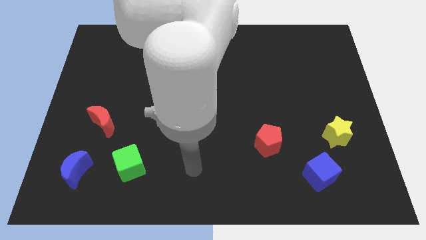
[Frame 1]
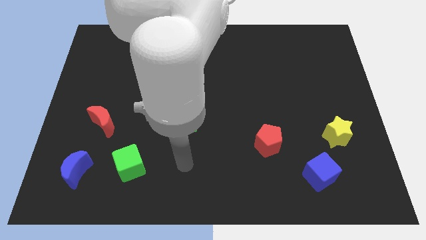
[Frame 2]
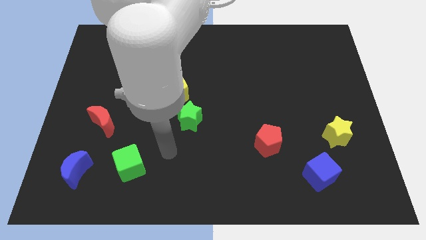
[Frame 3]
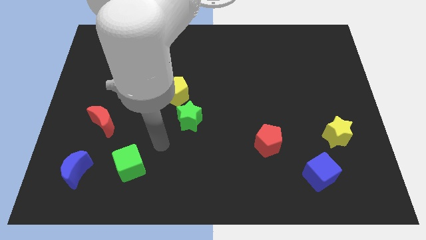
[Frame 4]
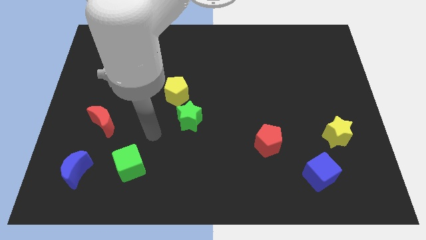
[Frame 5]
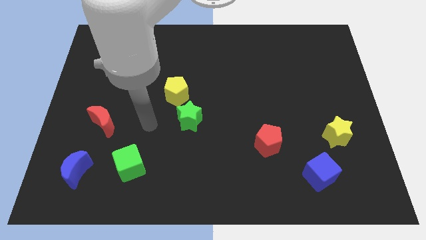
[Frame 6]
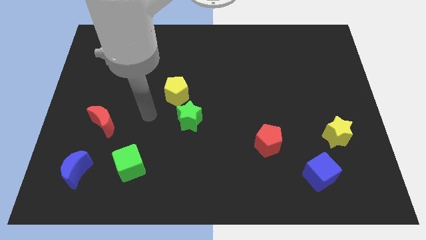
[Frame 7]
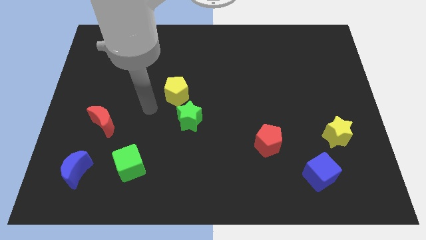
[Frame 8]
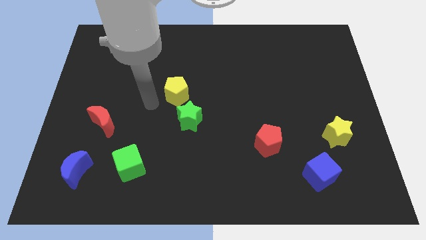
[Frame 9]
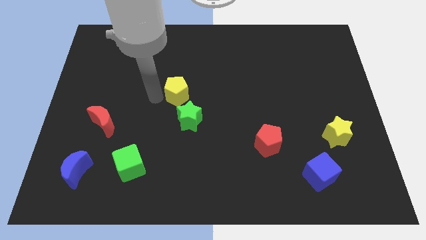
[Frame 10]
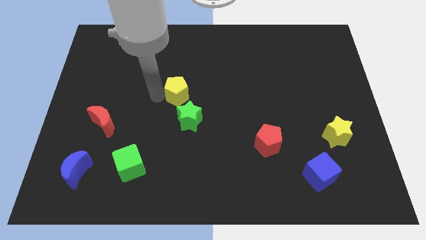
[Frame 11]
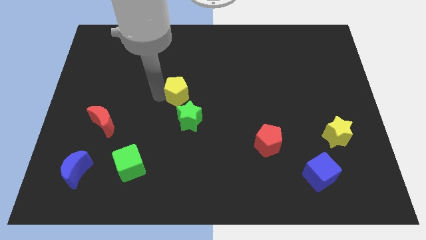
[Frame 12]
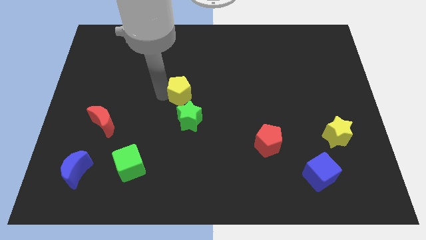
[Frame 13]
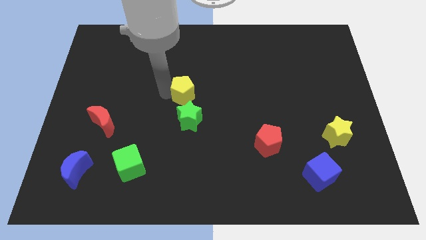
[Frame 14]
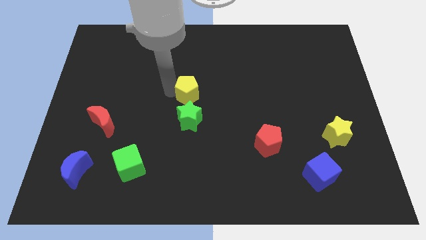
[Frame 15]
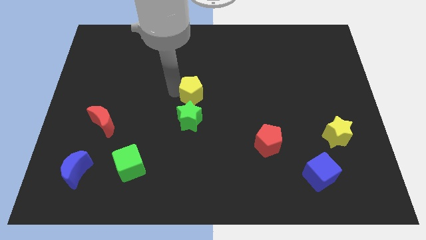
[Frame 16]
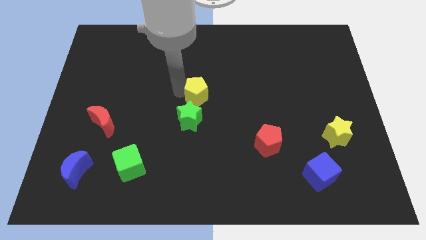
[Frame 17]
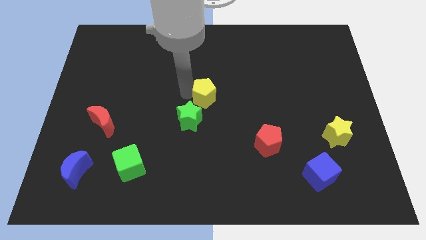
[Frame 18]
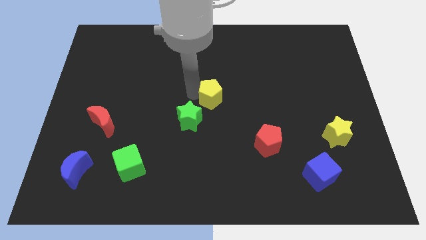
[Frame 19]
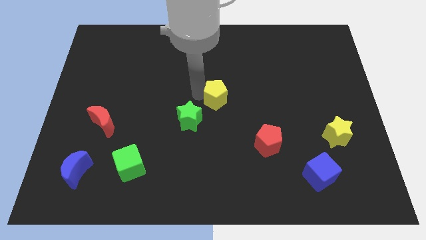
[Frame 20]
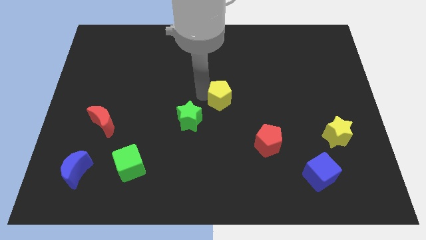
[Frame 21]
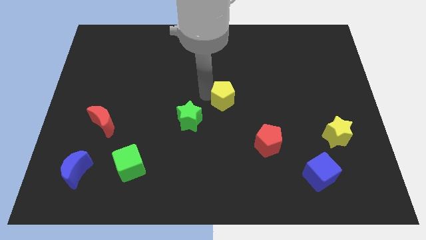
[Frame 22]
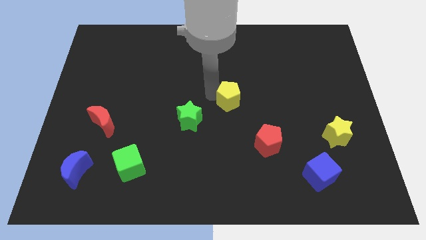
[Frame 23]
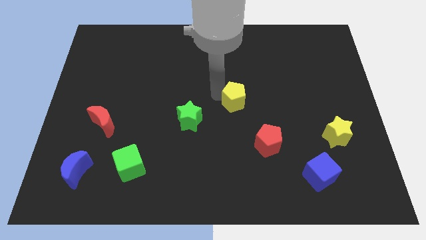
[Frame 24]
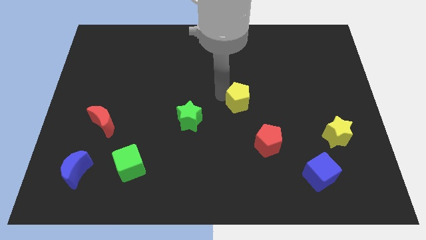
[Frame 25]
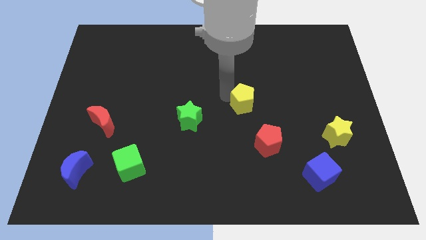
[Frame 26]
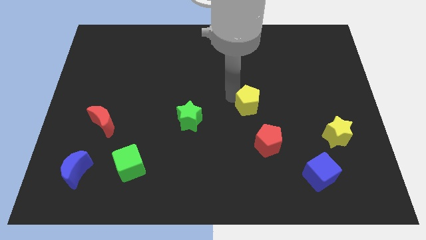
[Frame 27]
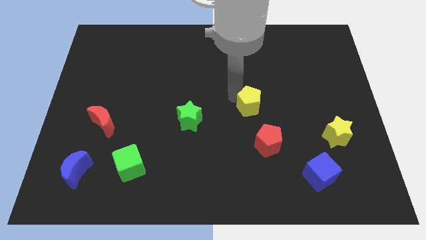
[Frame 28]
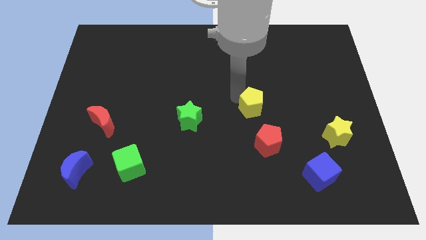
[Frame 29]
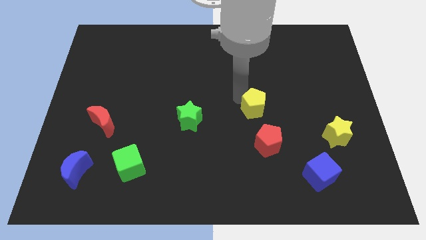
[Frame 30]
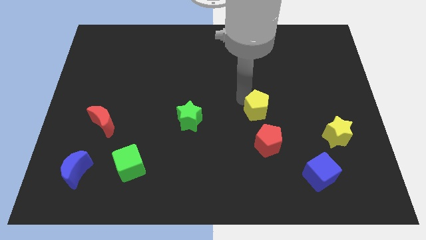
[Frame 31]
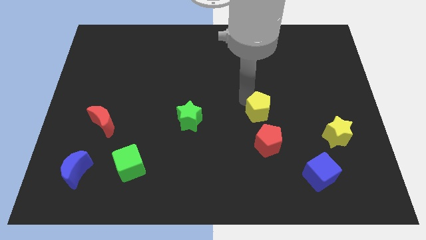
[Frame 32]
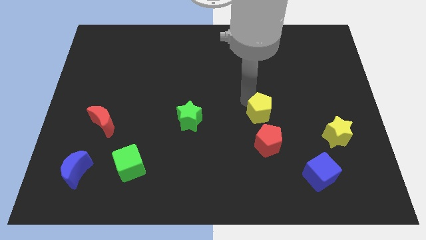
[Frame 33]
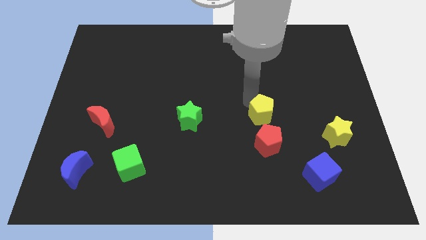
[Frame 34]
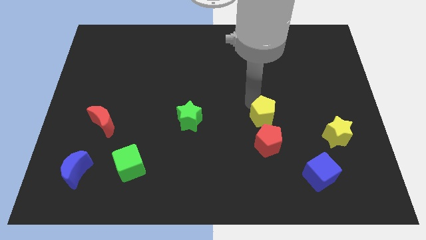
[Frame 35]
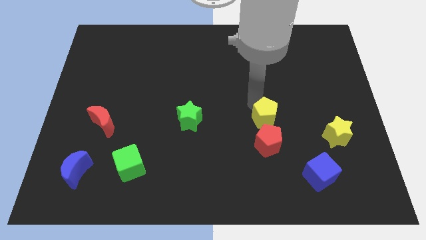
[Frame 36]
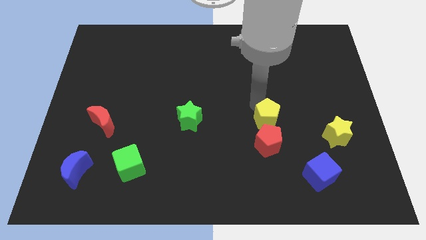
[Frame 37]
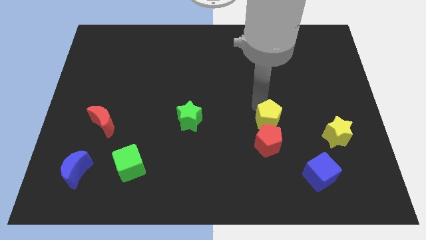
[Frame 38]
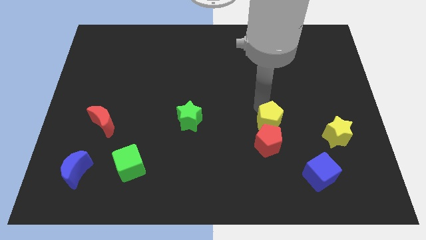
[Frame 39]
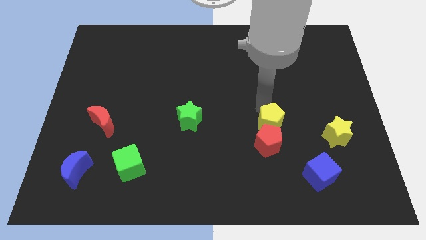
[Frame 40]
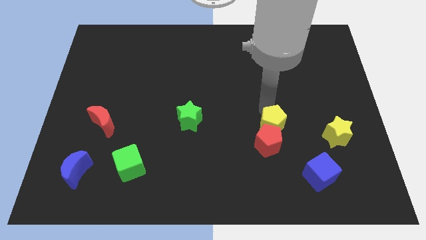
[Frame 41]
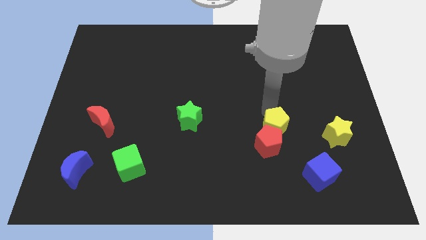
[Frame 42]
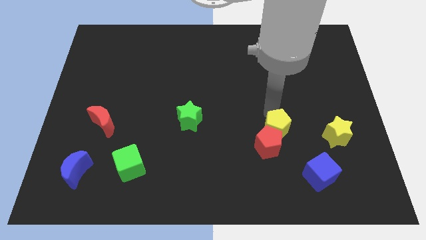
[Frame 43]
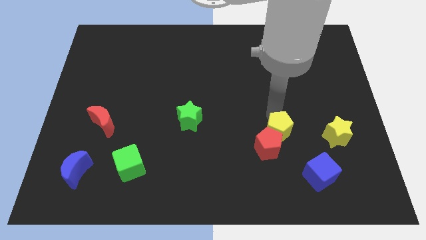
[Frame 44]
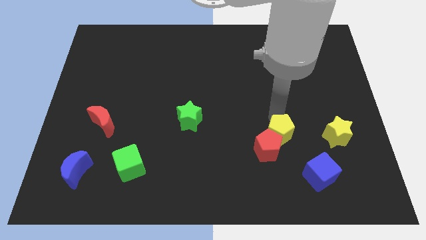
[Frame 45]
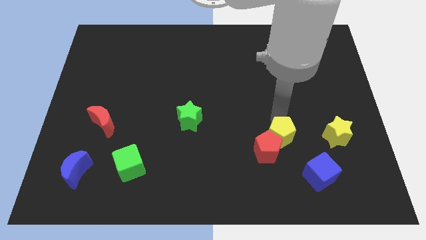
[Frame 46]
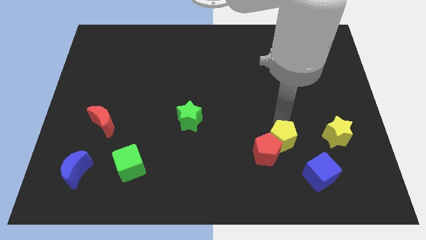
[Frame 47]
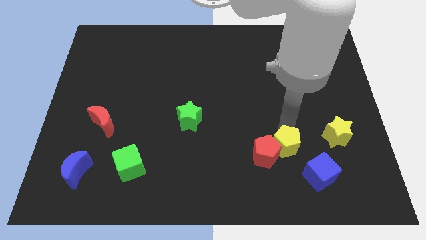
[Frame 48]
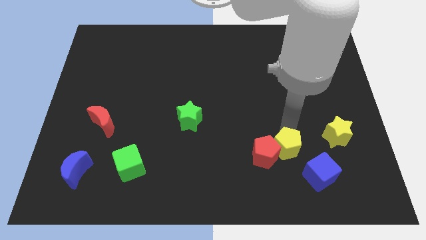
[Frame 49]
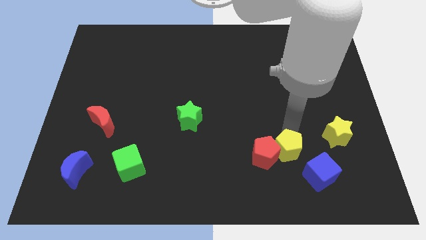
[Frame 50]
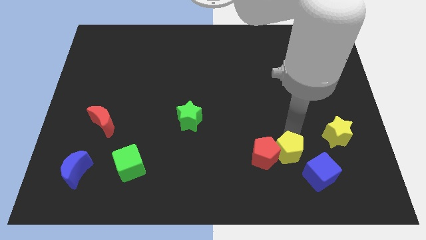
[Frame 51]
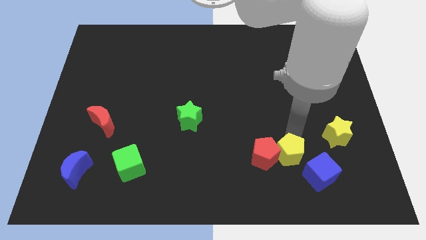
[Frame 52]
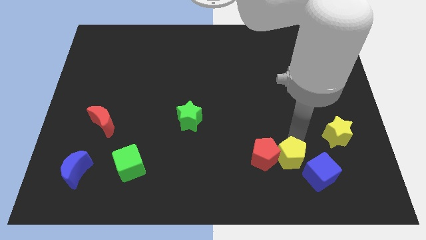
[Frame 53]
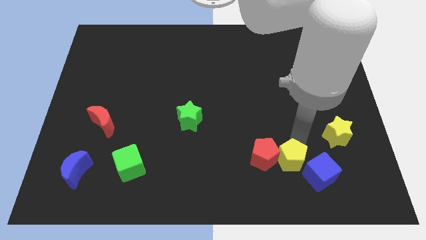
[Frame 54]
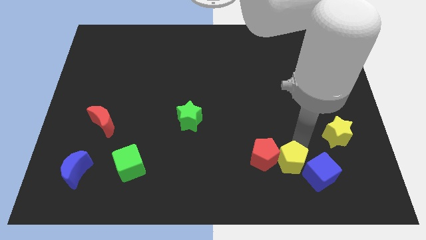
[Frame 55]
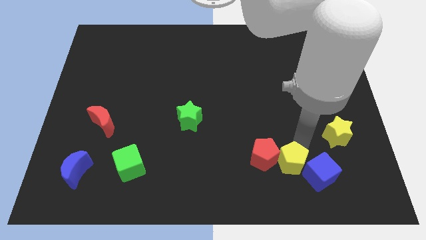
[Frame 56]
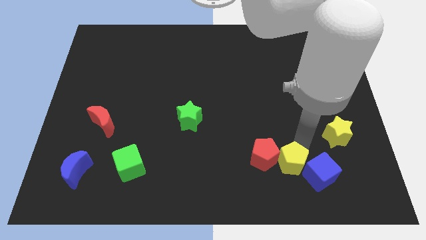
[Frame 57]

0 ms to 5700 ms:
slide the yellow pentagon next to the blue cube

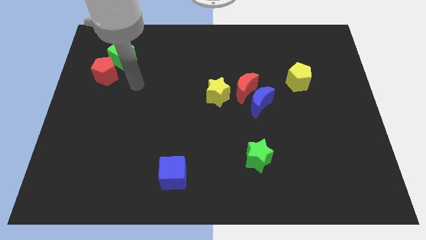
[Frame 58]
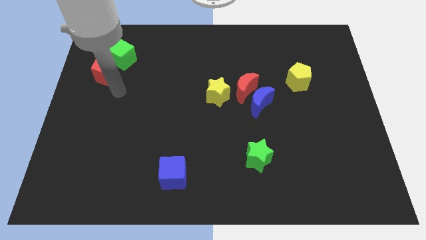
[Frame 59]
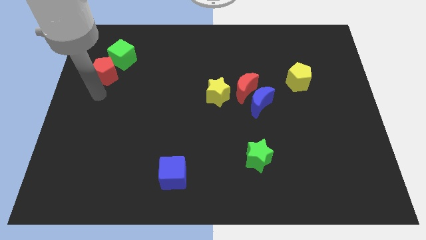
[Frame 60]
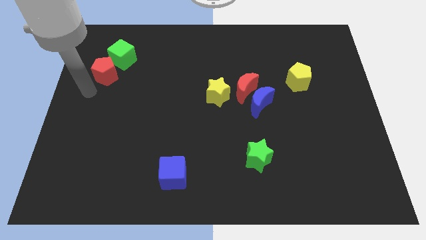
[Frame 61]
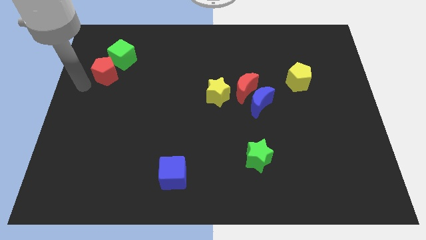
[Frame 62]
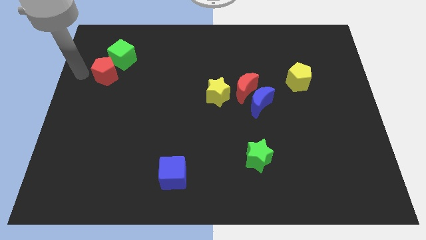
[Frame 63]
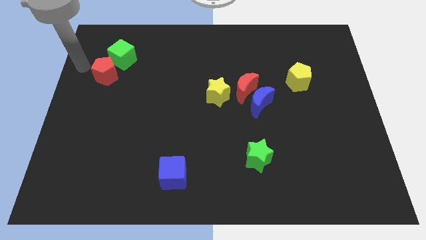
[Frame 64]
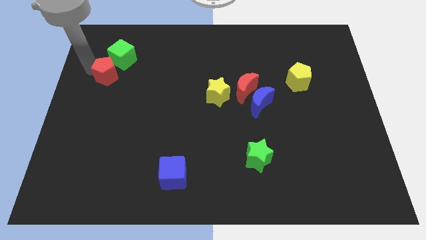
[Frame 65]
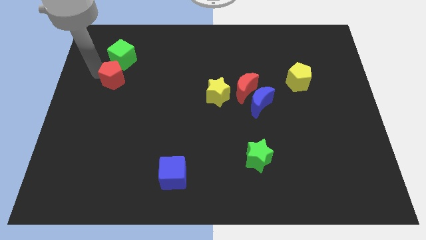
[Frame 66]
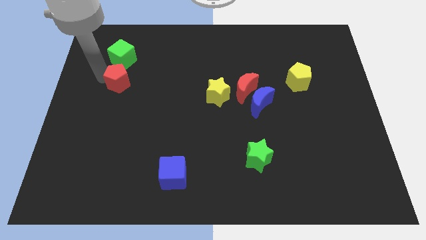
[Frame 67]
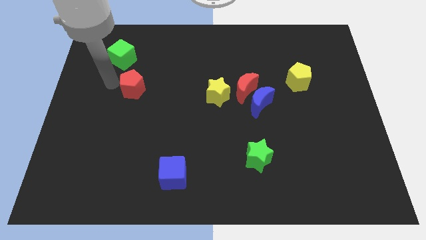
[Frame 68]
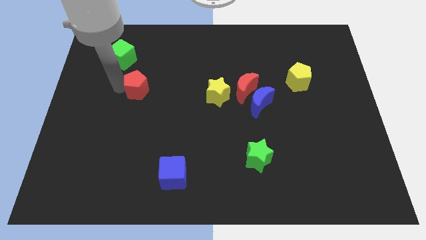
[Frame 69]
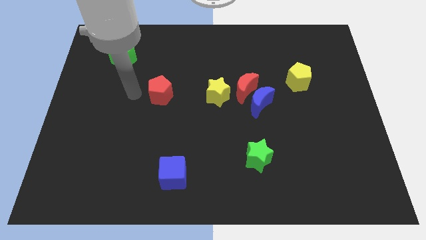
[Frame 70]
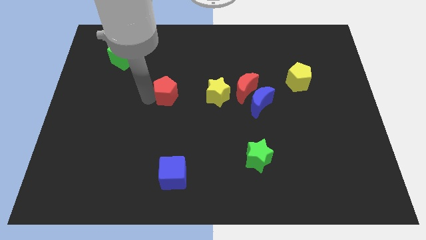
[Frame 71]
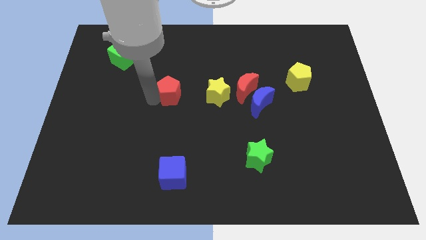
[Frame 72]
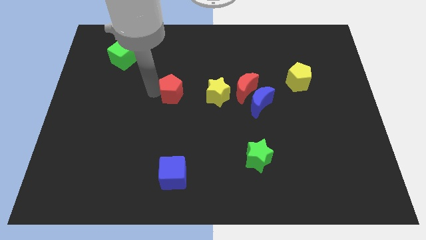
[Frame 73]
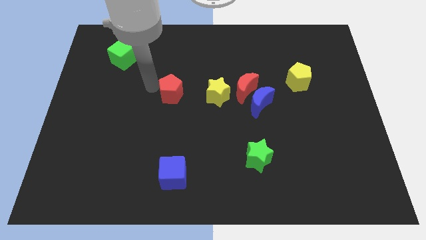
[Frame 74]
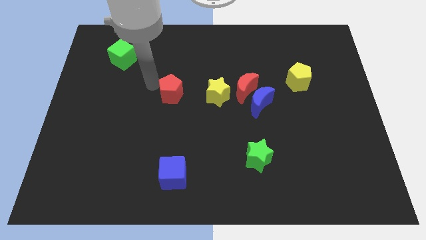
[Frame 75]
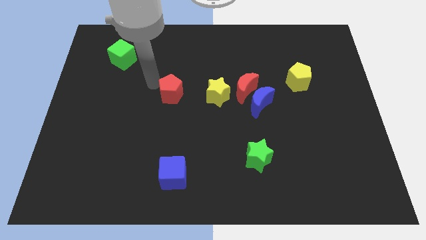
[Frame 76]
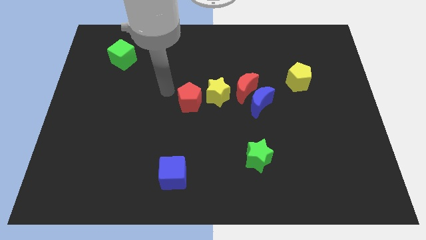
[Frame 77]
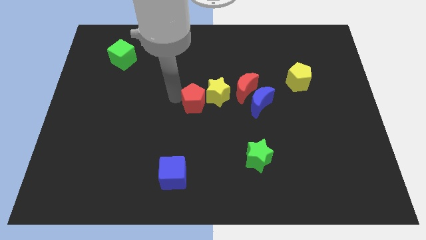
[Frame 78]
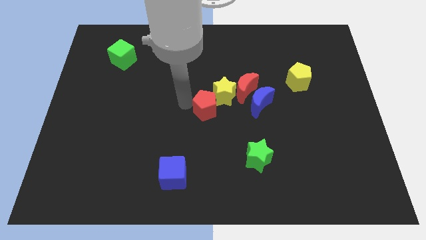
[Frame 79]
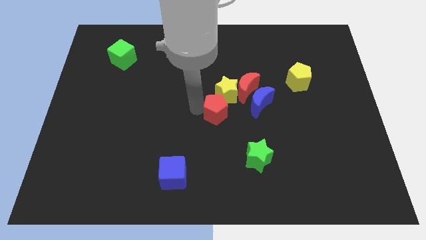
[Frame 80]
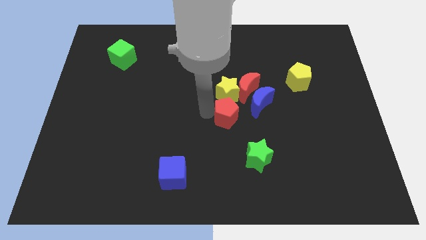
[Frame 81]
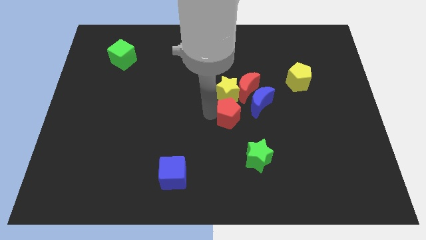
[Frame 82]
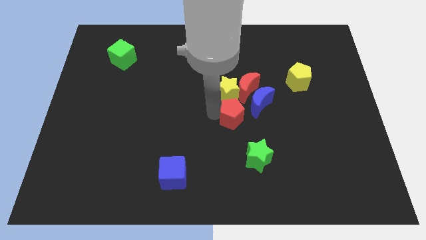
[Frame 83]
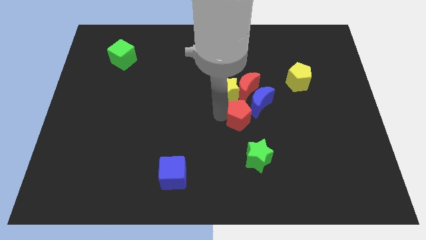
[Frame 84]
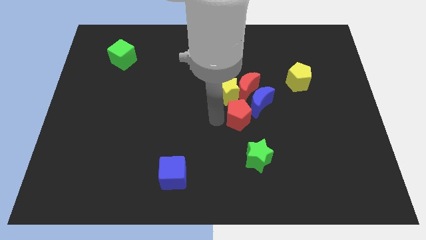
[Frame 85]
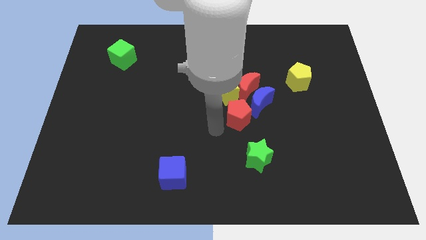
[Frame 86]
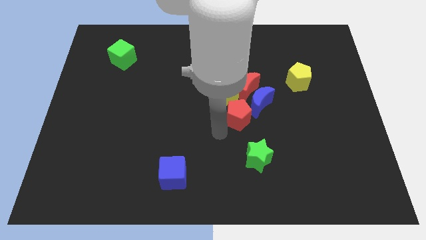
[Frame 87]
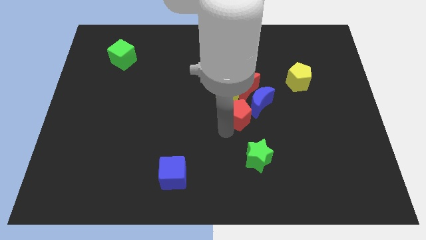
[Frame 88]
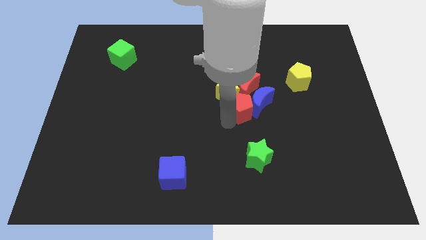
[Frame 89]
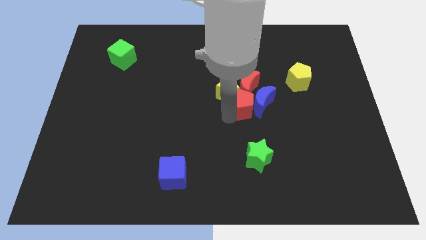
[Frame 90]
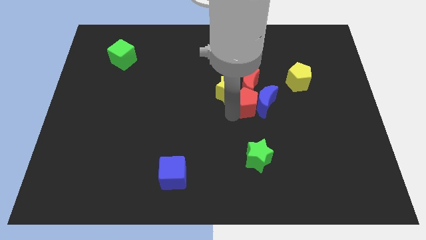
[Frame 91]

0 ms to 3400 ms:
put the red pentagon close to the blue moon
